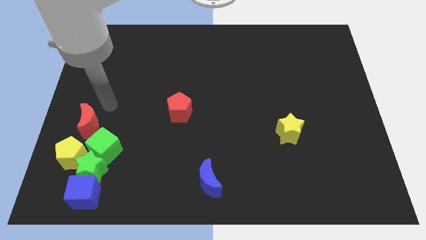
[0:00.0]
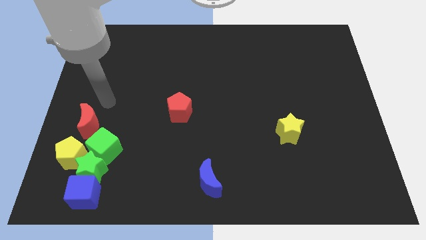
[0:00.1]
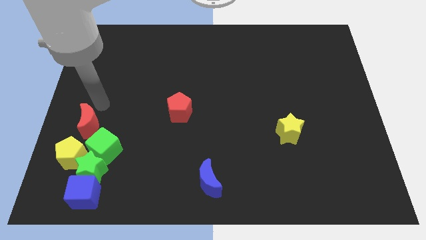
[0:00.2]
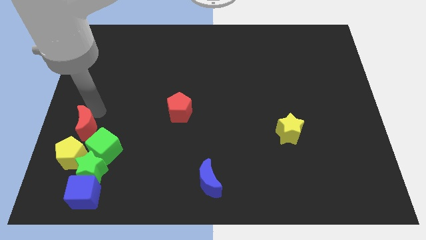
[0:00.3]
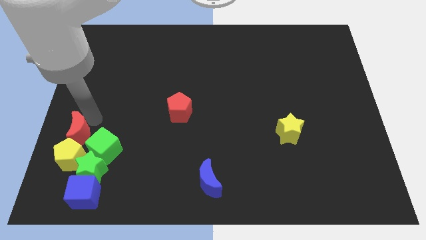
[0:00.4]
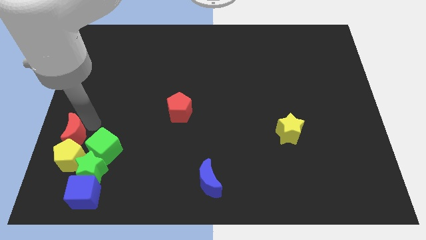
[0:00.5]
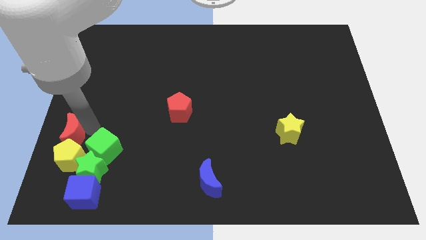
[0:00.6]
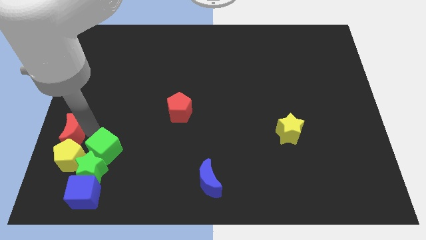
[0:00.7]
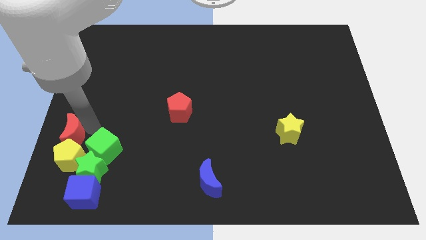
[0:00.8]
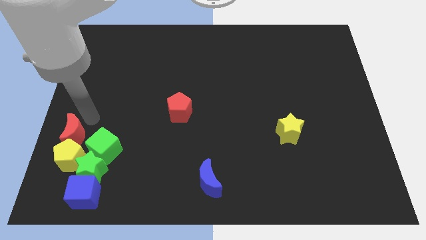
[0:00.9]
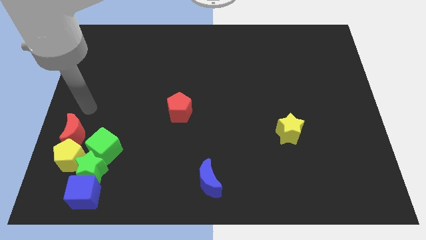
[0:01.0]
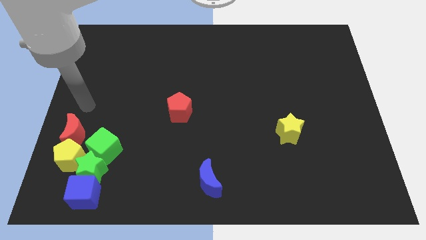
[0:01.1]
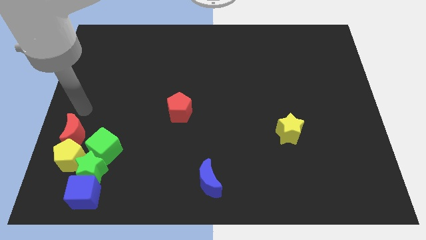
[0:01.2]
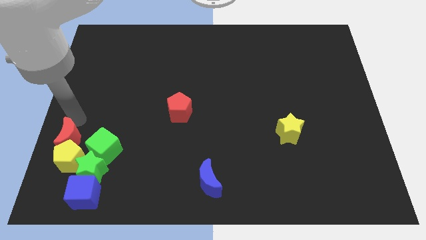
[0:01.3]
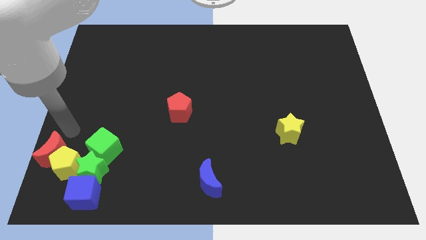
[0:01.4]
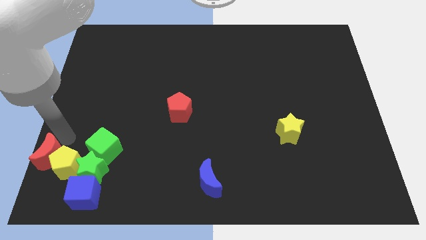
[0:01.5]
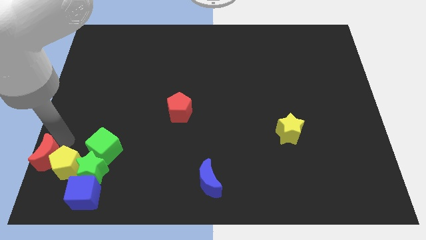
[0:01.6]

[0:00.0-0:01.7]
push the red crescent towards the left bottom of the board

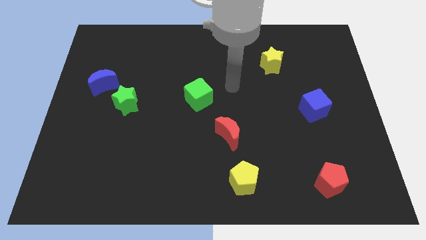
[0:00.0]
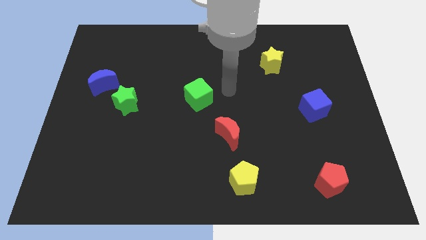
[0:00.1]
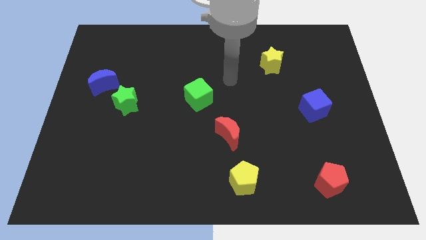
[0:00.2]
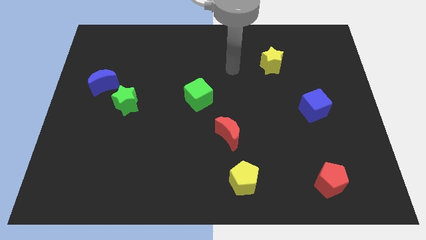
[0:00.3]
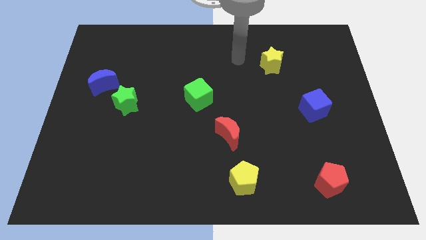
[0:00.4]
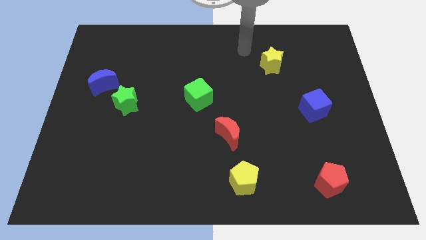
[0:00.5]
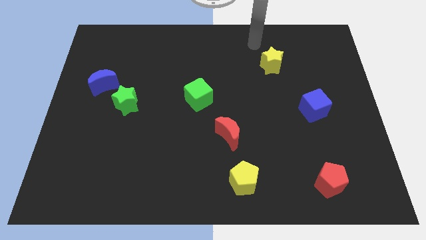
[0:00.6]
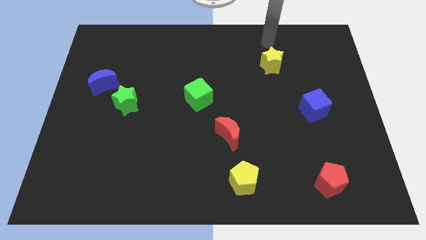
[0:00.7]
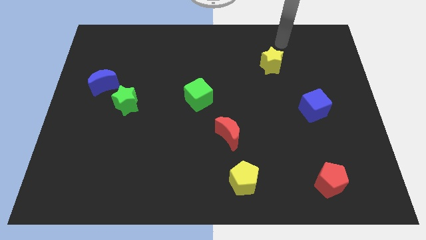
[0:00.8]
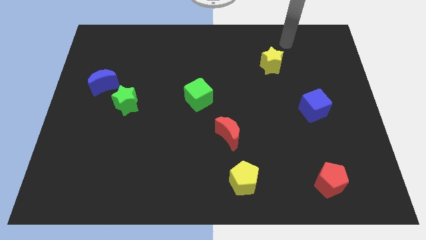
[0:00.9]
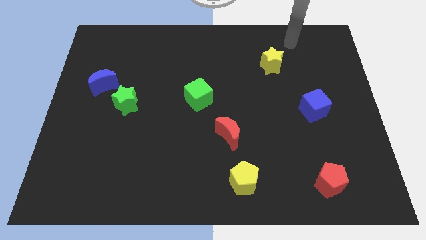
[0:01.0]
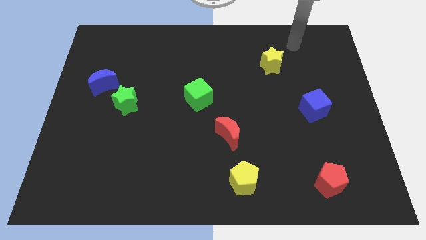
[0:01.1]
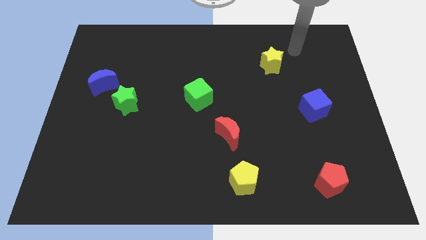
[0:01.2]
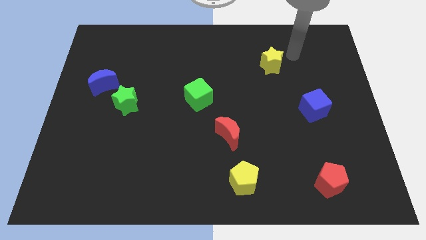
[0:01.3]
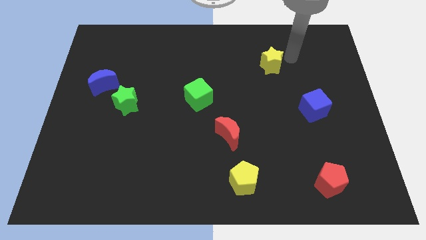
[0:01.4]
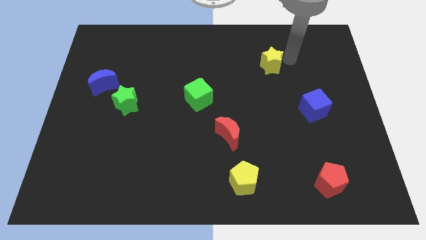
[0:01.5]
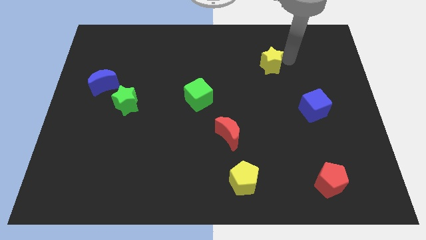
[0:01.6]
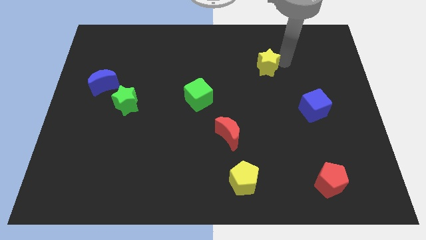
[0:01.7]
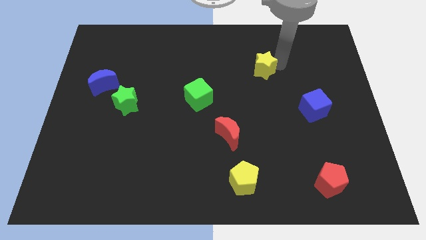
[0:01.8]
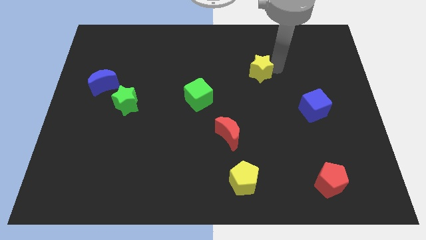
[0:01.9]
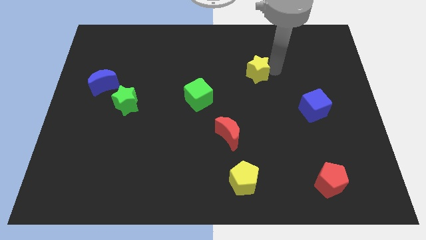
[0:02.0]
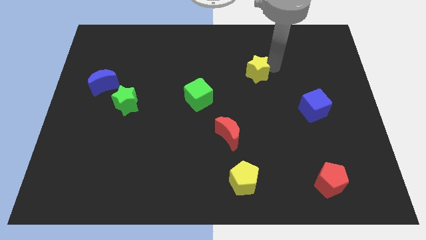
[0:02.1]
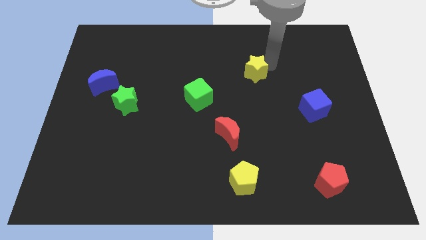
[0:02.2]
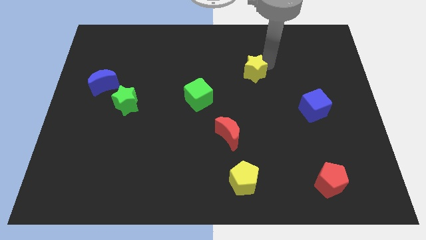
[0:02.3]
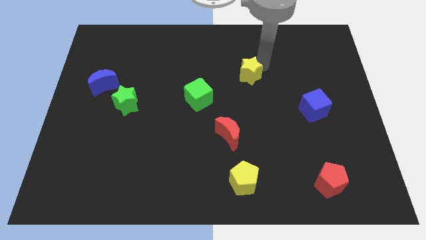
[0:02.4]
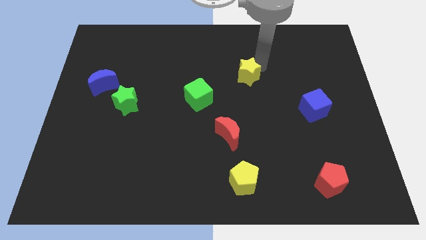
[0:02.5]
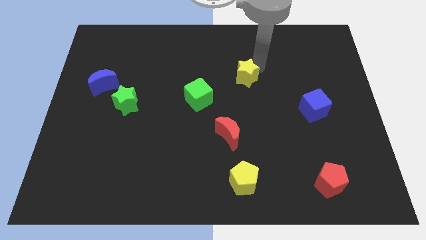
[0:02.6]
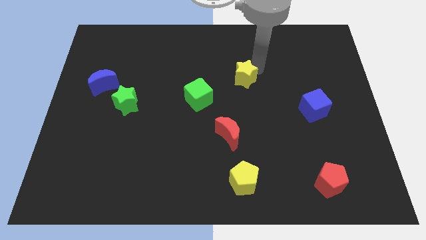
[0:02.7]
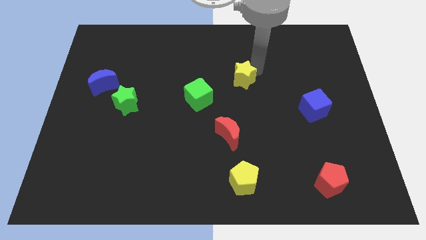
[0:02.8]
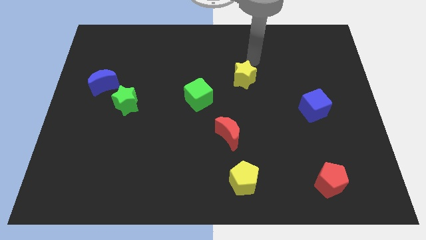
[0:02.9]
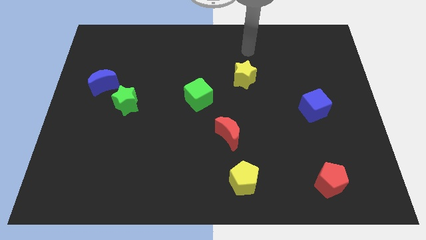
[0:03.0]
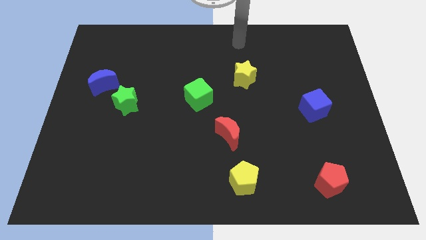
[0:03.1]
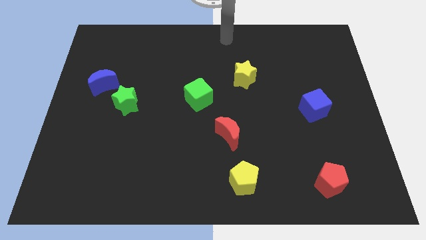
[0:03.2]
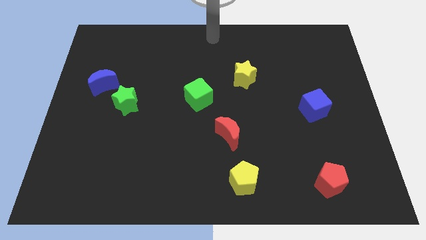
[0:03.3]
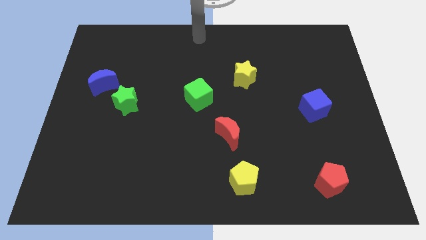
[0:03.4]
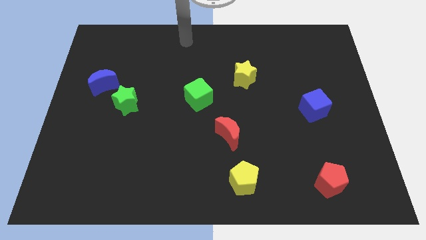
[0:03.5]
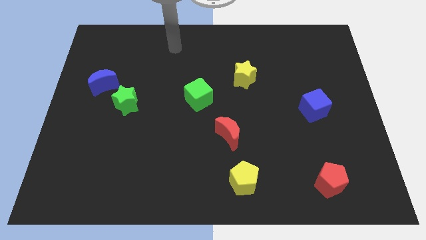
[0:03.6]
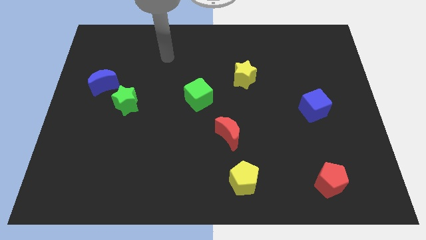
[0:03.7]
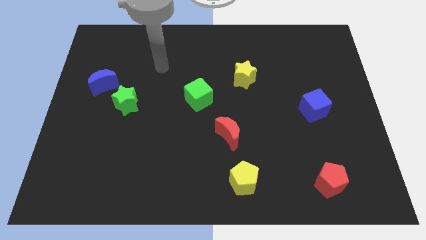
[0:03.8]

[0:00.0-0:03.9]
place the yellow star to the right top of the green cube

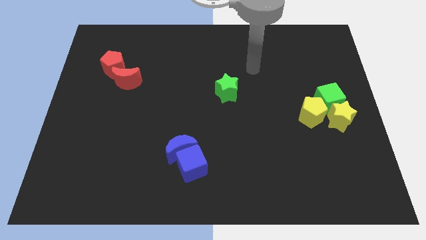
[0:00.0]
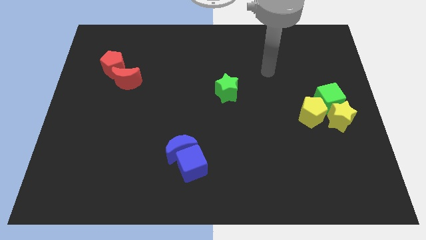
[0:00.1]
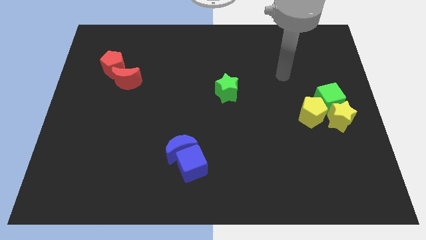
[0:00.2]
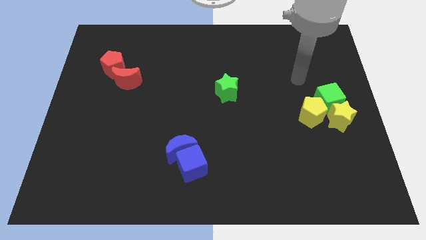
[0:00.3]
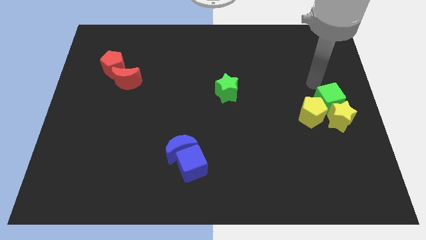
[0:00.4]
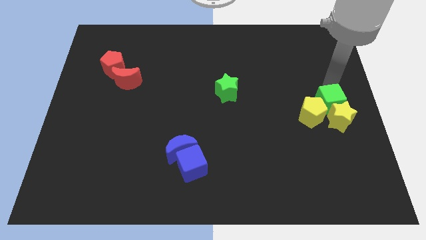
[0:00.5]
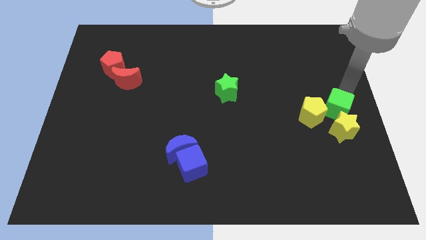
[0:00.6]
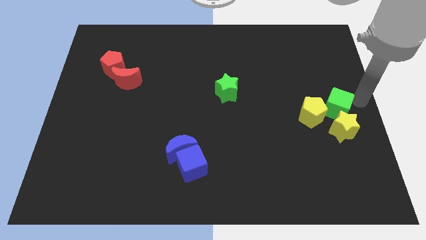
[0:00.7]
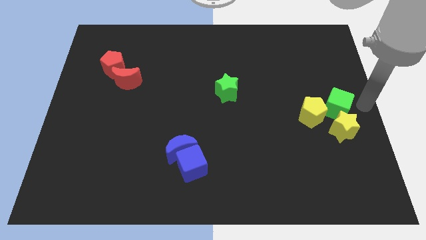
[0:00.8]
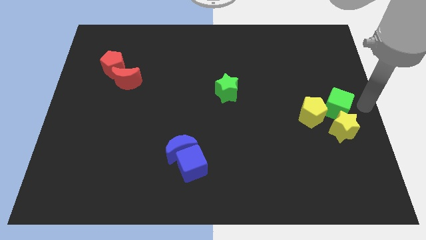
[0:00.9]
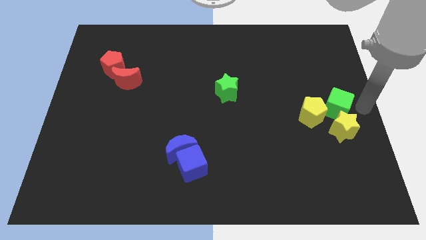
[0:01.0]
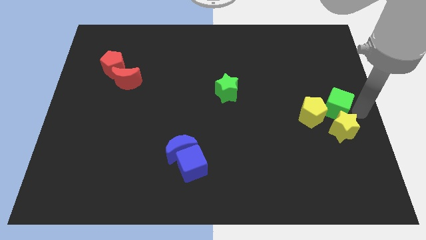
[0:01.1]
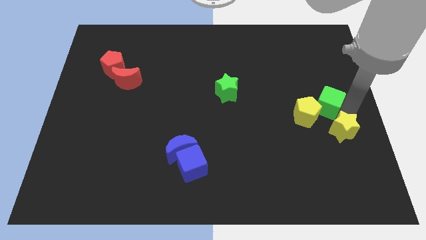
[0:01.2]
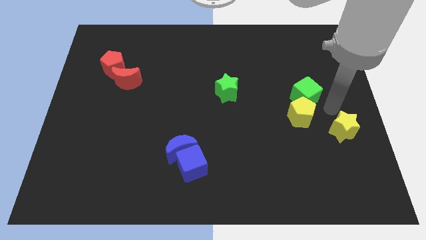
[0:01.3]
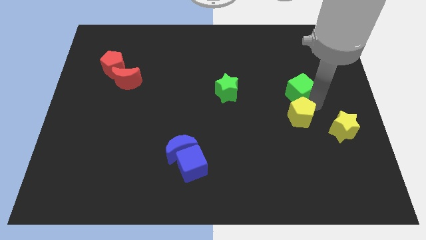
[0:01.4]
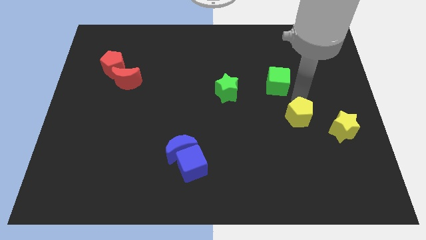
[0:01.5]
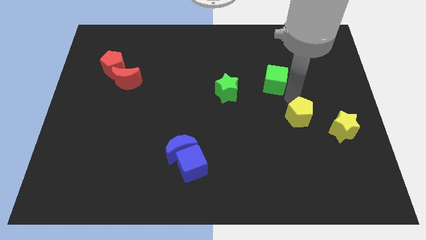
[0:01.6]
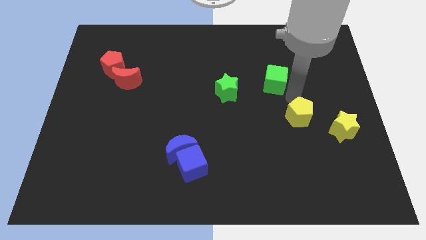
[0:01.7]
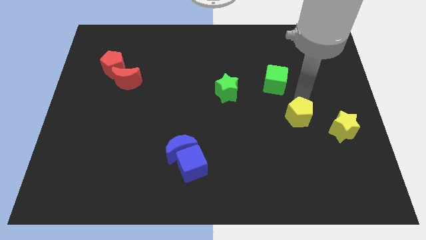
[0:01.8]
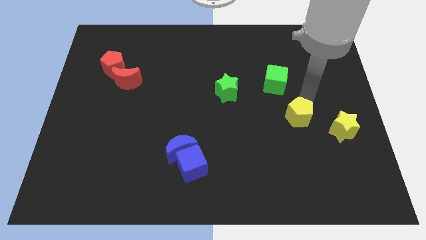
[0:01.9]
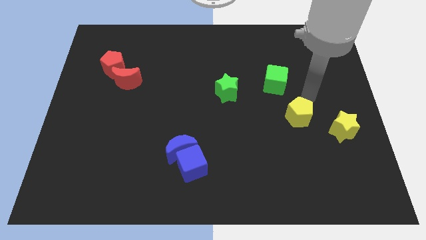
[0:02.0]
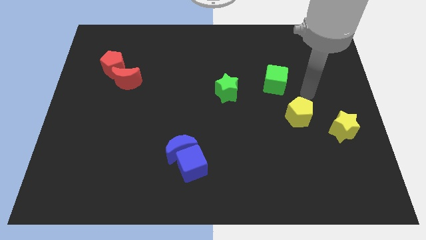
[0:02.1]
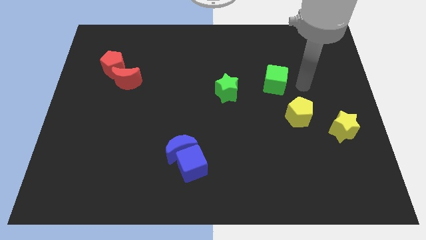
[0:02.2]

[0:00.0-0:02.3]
separate the green cube and yellow star

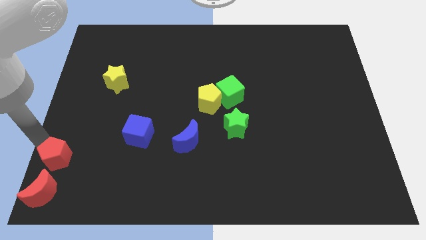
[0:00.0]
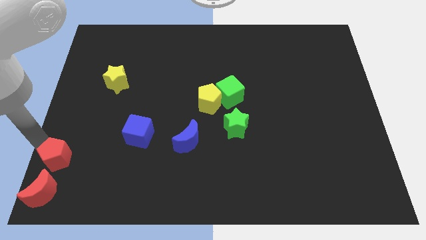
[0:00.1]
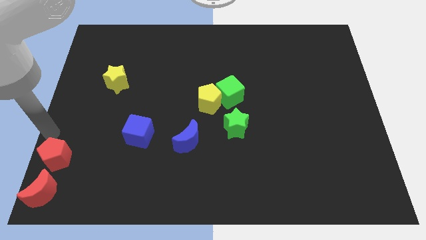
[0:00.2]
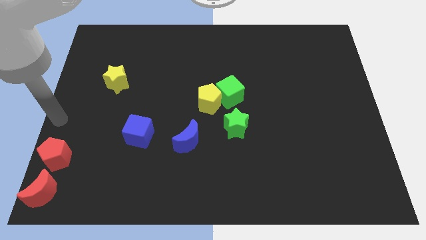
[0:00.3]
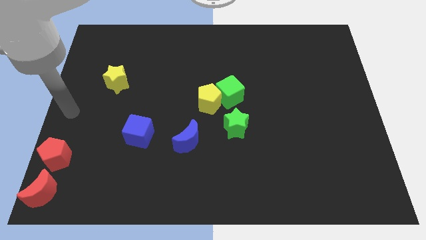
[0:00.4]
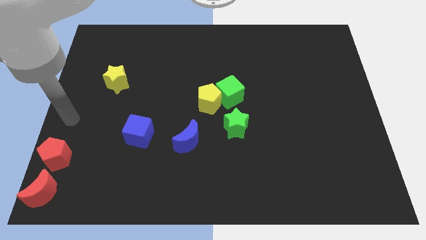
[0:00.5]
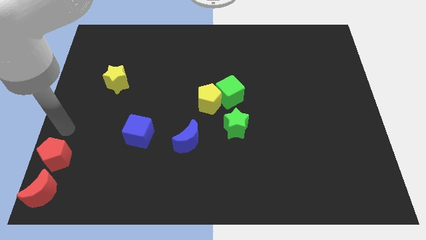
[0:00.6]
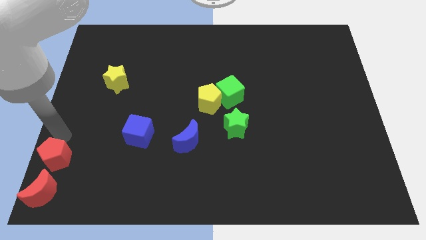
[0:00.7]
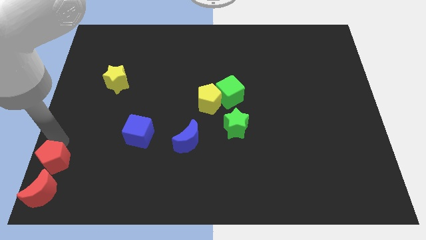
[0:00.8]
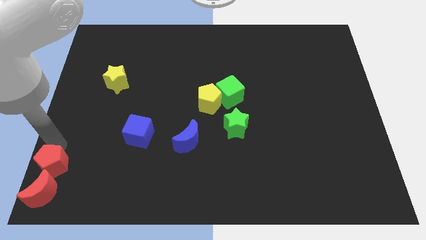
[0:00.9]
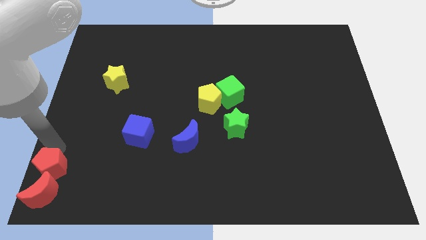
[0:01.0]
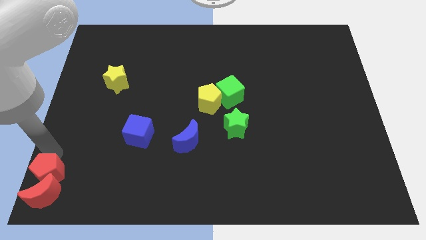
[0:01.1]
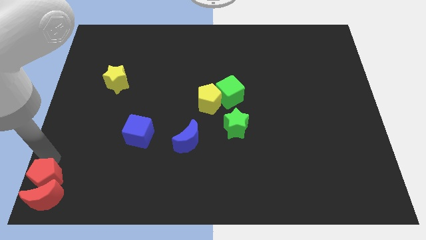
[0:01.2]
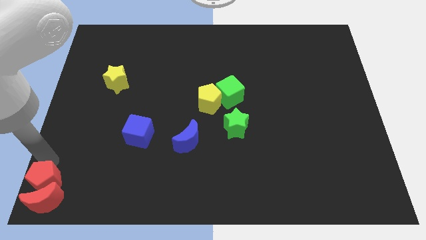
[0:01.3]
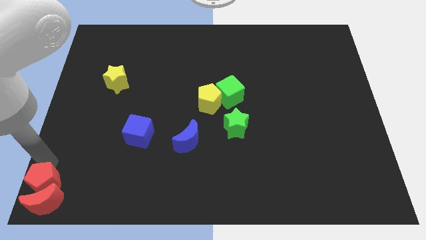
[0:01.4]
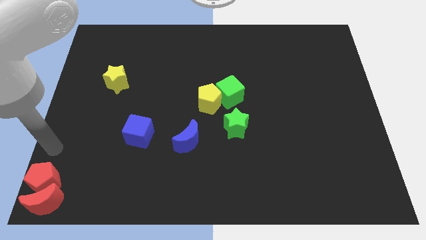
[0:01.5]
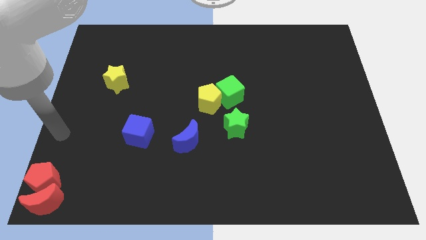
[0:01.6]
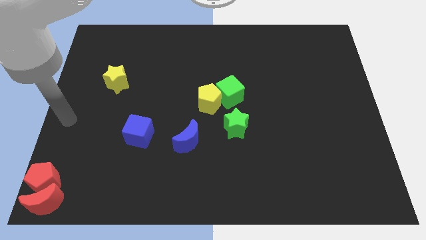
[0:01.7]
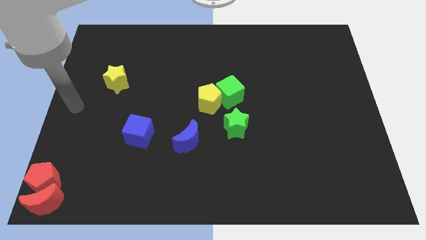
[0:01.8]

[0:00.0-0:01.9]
push the red pentagon into the red moon
